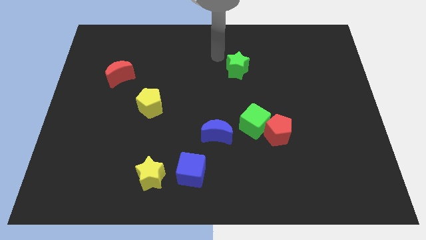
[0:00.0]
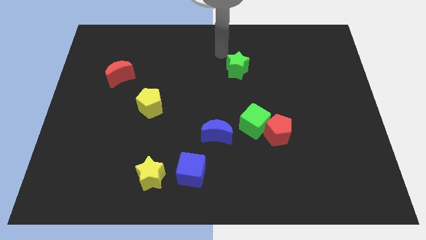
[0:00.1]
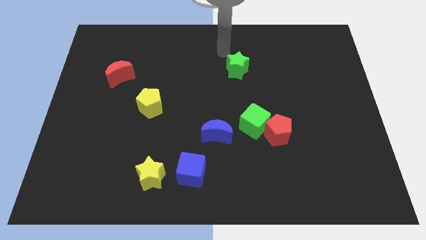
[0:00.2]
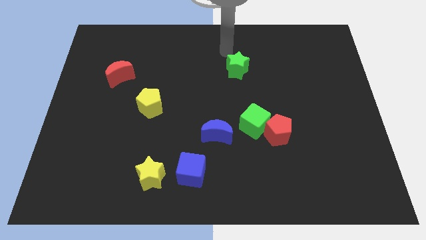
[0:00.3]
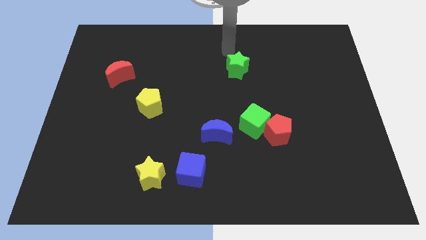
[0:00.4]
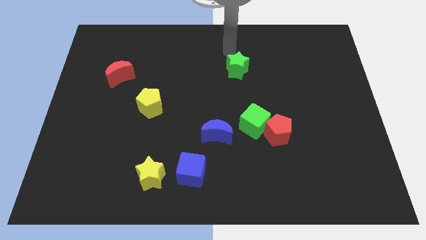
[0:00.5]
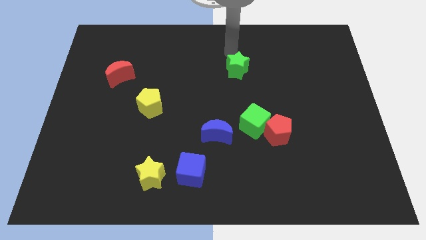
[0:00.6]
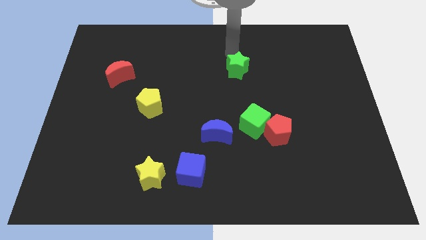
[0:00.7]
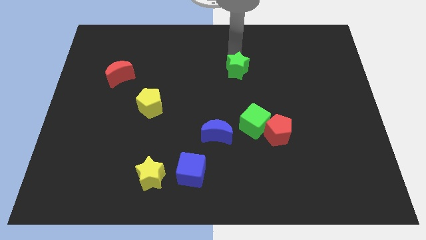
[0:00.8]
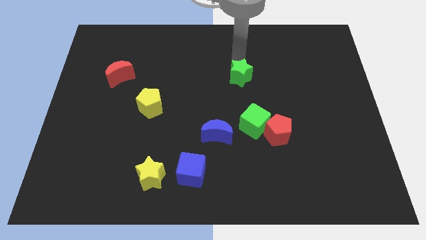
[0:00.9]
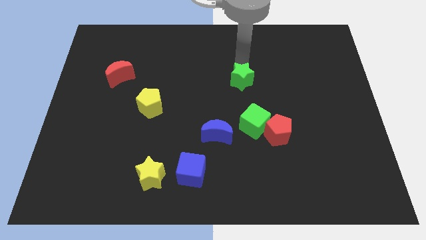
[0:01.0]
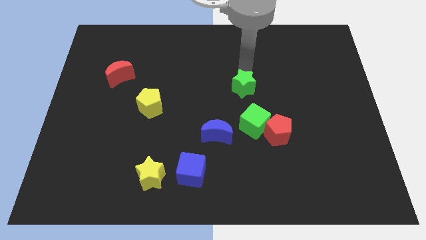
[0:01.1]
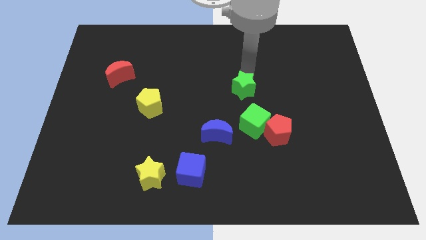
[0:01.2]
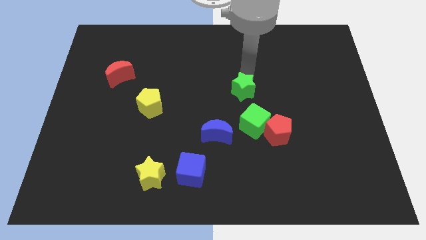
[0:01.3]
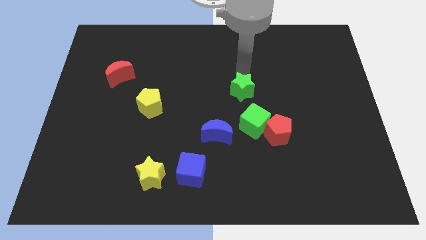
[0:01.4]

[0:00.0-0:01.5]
move the green star down slightly

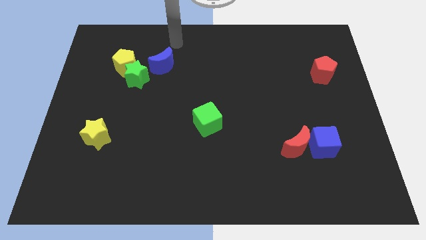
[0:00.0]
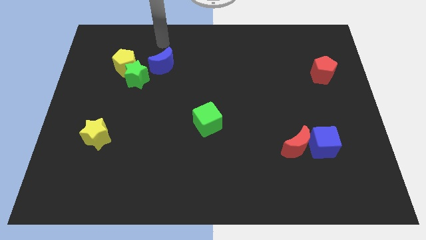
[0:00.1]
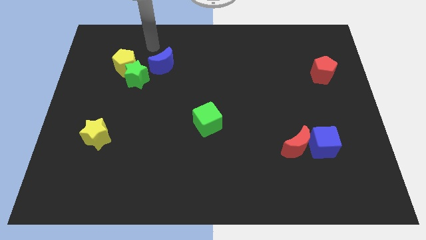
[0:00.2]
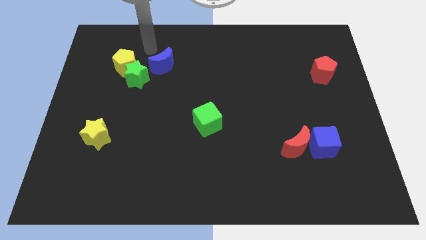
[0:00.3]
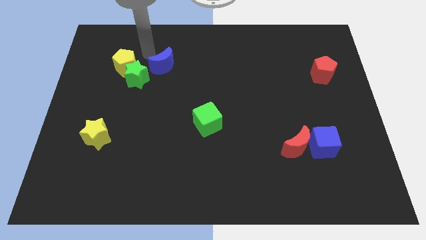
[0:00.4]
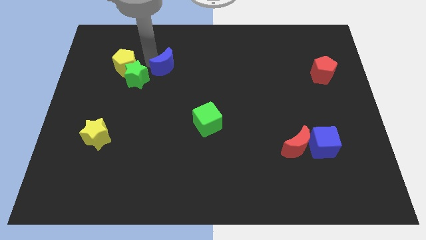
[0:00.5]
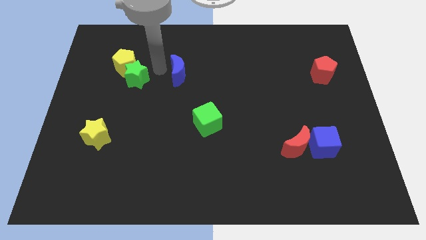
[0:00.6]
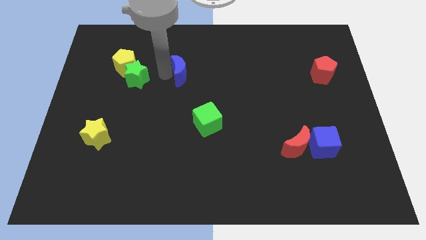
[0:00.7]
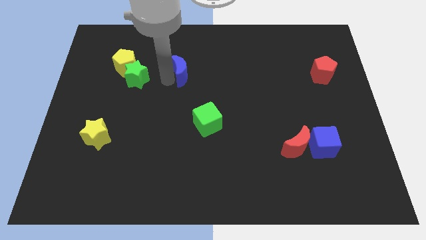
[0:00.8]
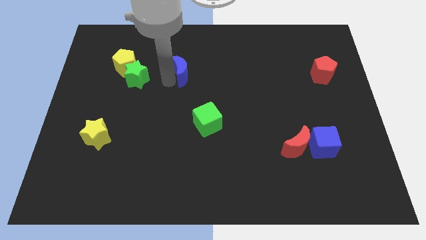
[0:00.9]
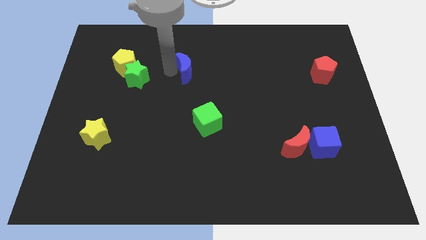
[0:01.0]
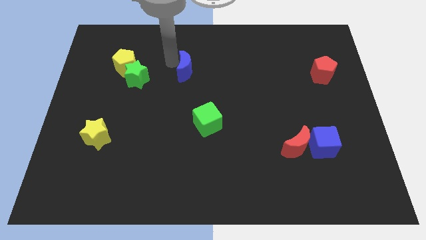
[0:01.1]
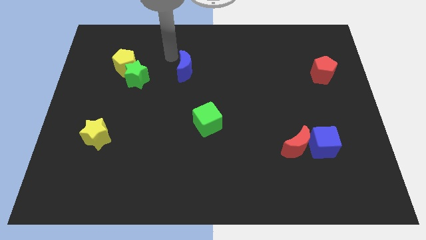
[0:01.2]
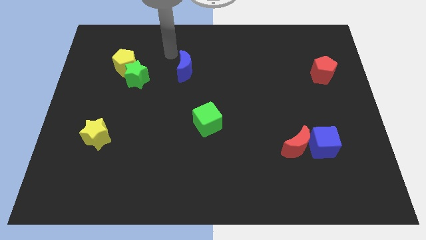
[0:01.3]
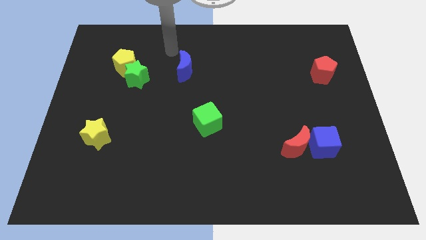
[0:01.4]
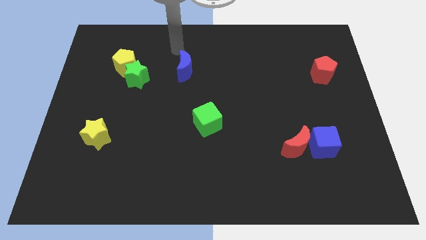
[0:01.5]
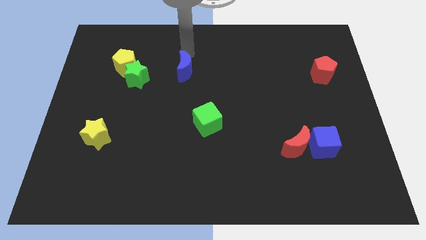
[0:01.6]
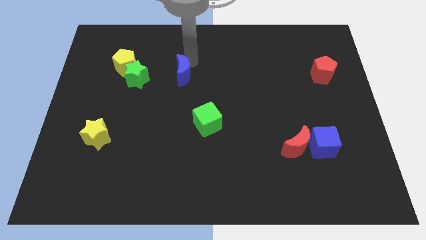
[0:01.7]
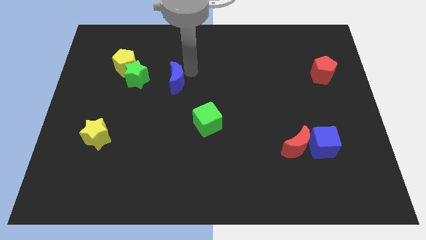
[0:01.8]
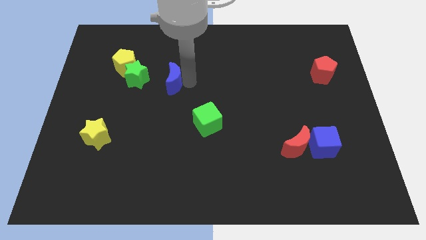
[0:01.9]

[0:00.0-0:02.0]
push the blue crescent to the right of the green star

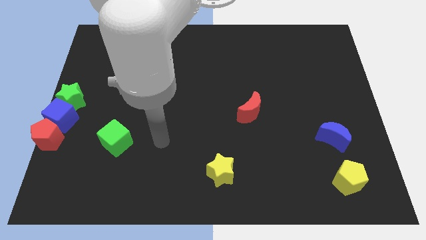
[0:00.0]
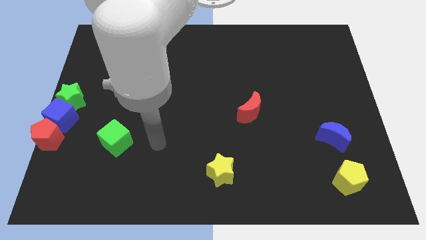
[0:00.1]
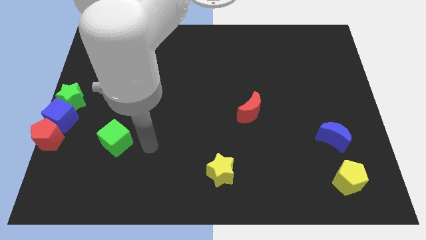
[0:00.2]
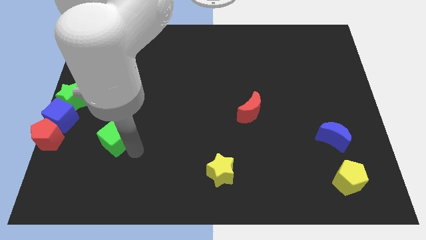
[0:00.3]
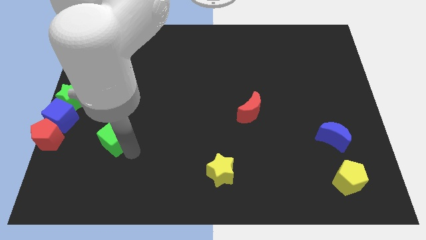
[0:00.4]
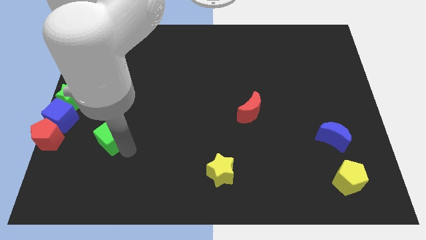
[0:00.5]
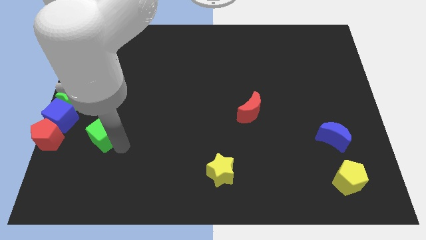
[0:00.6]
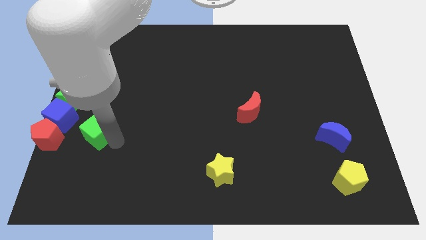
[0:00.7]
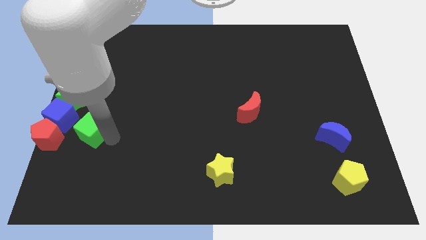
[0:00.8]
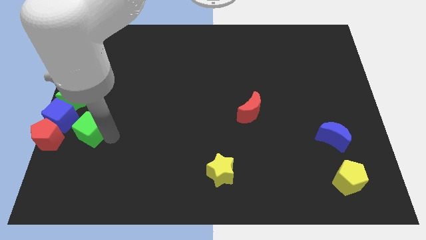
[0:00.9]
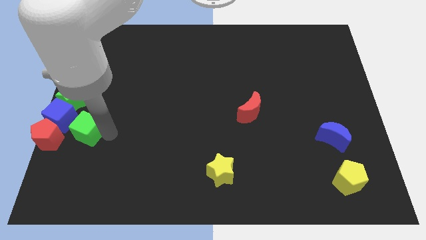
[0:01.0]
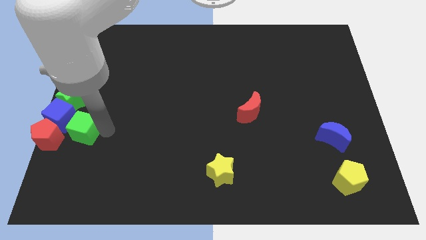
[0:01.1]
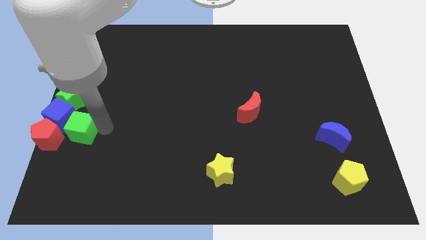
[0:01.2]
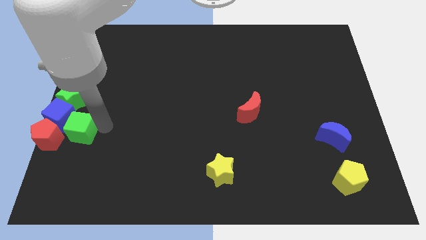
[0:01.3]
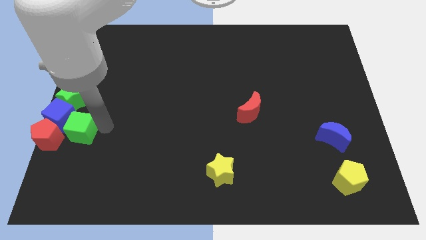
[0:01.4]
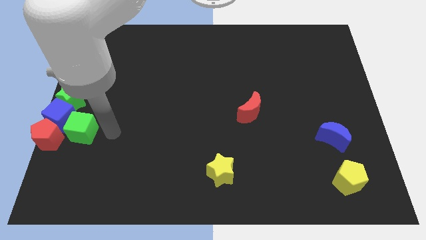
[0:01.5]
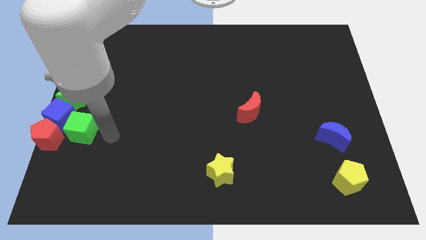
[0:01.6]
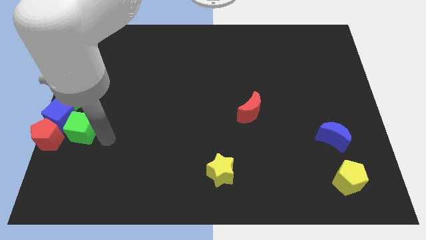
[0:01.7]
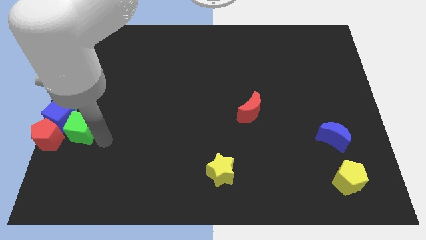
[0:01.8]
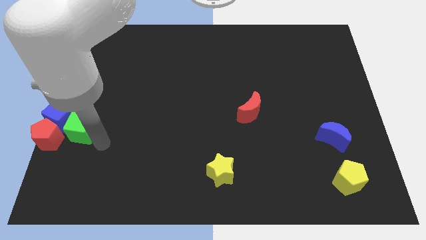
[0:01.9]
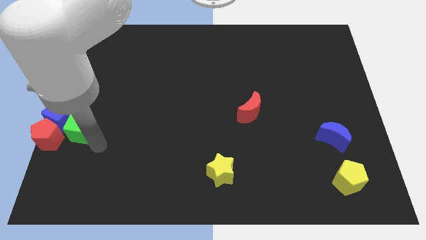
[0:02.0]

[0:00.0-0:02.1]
push the green cube close to the blue cube

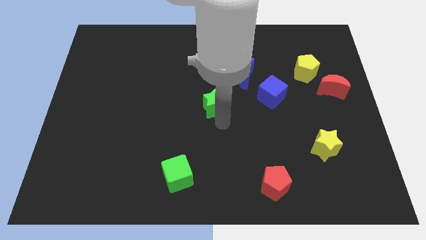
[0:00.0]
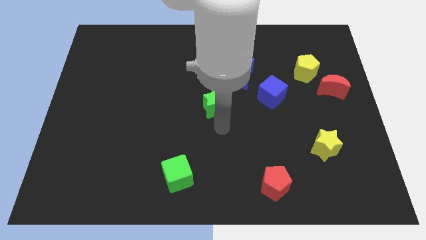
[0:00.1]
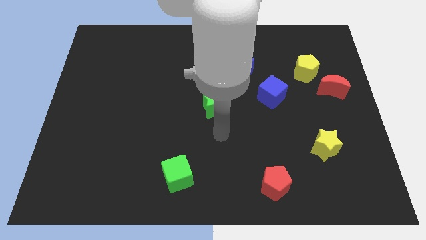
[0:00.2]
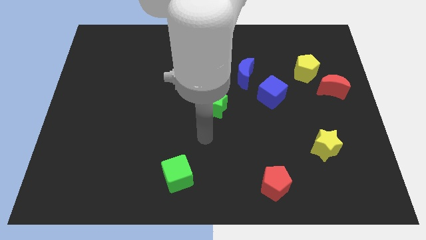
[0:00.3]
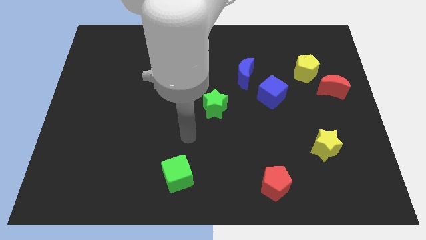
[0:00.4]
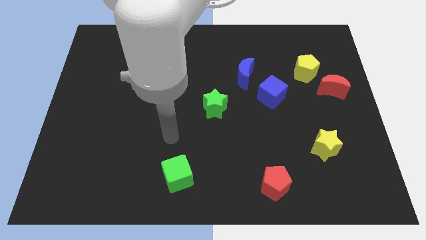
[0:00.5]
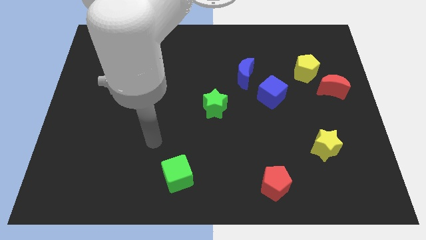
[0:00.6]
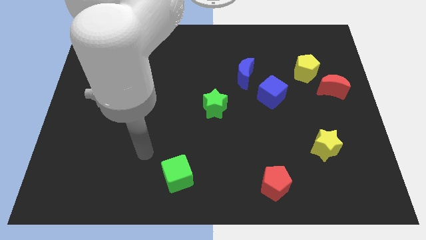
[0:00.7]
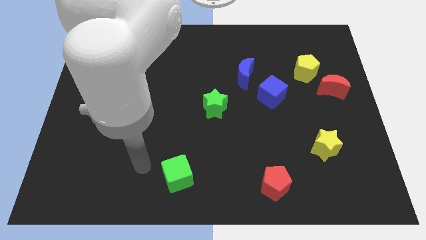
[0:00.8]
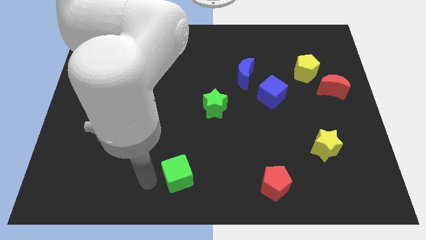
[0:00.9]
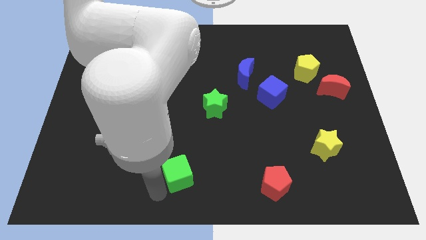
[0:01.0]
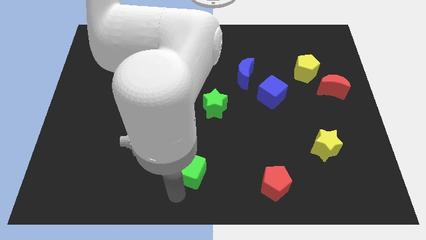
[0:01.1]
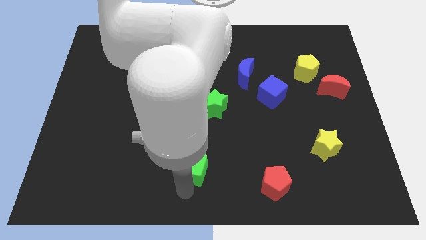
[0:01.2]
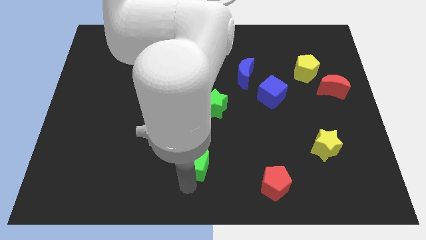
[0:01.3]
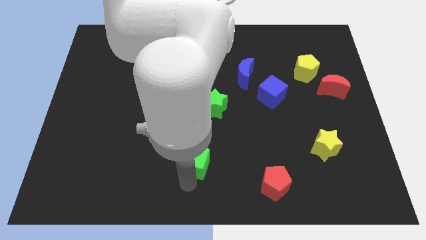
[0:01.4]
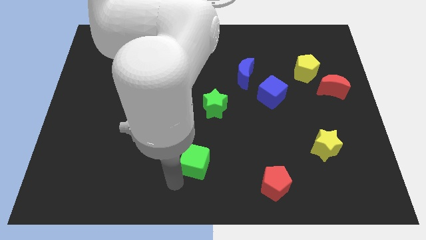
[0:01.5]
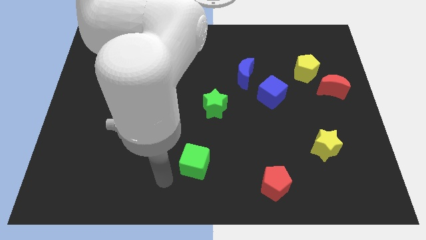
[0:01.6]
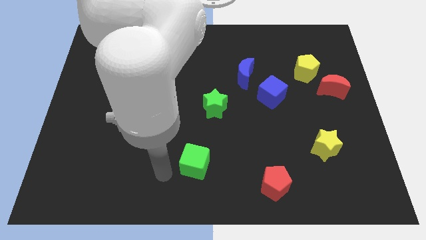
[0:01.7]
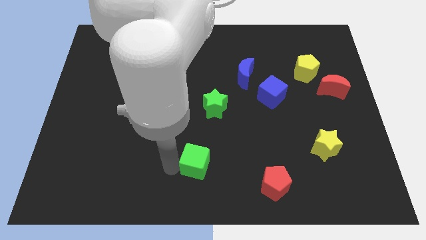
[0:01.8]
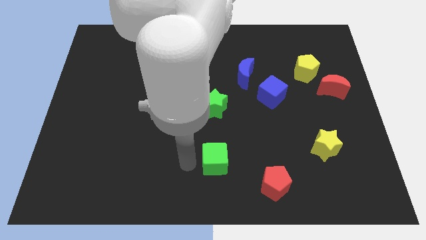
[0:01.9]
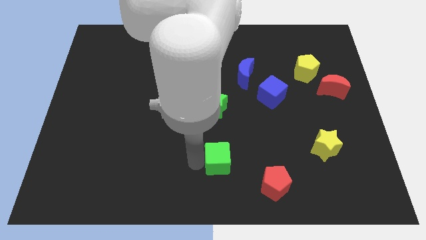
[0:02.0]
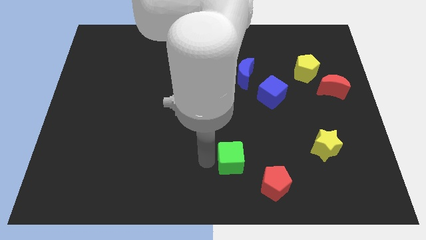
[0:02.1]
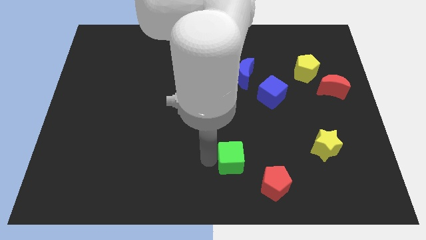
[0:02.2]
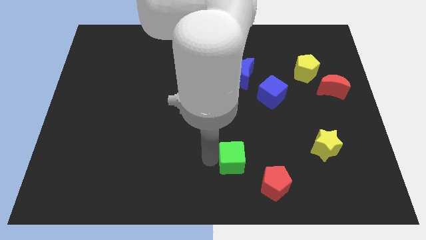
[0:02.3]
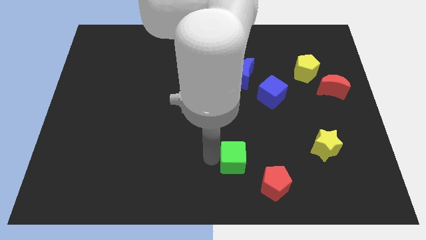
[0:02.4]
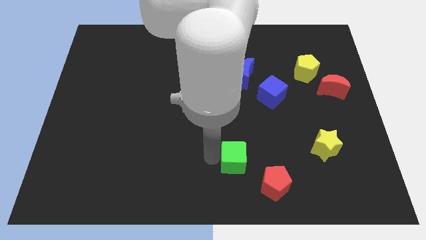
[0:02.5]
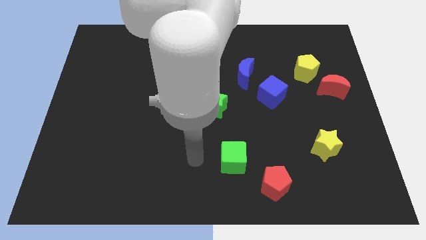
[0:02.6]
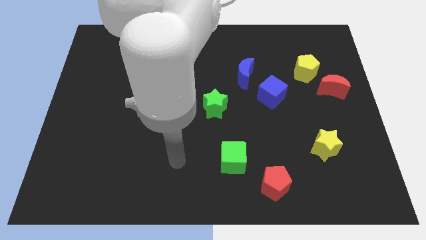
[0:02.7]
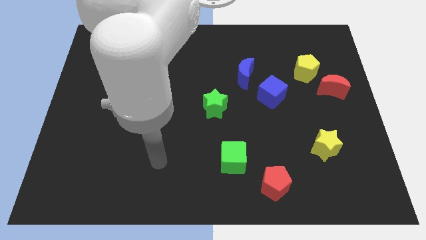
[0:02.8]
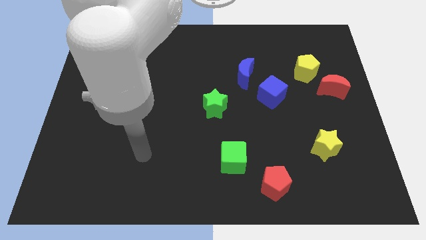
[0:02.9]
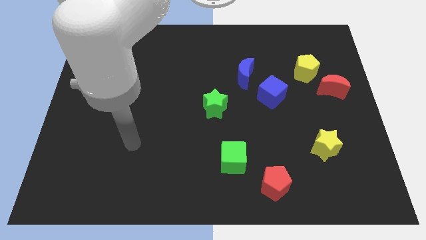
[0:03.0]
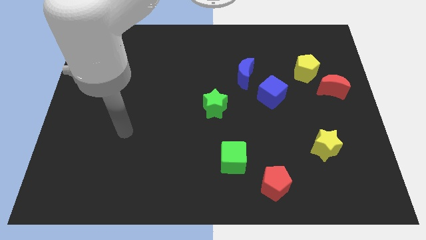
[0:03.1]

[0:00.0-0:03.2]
push the green cube towards the red pentagon

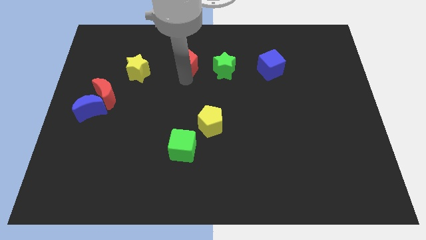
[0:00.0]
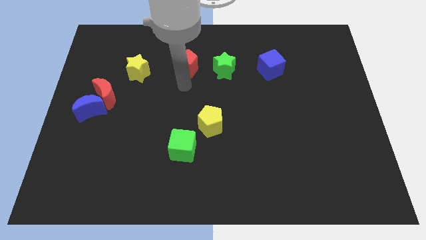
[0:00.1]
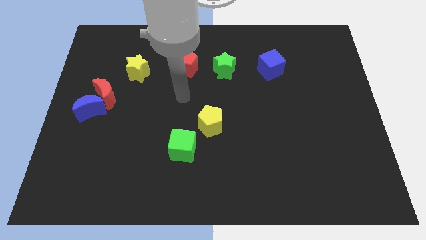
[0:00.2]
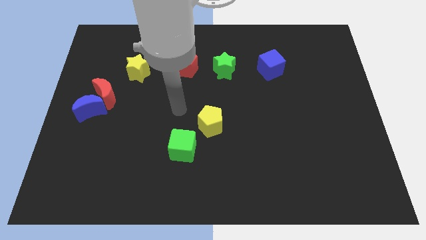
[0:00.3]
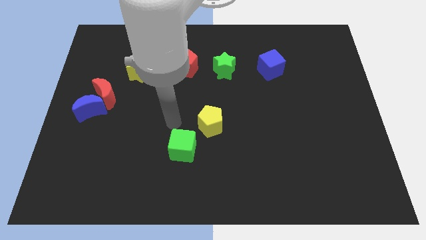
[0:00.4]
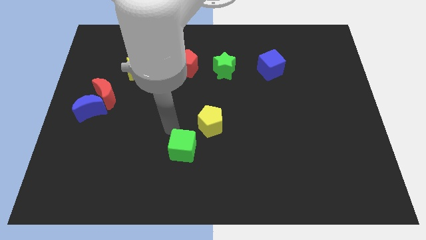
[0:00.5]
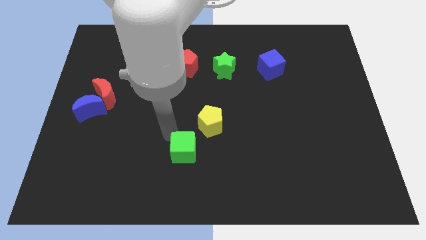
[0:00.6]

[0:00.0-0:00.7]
tap the red pentagon
